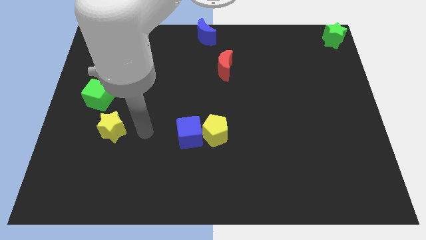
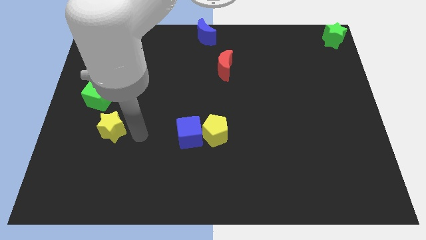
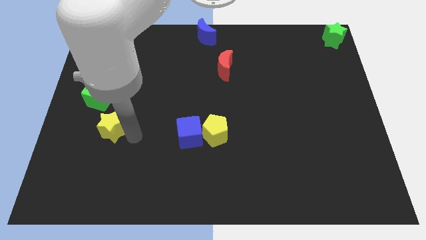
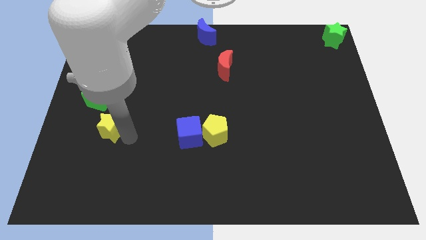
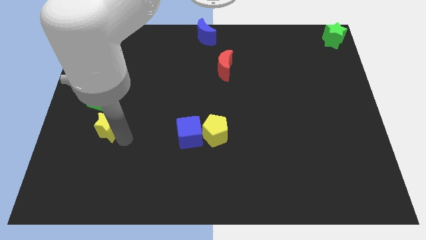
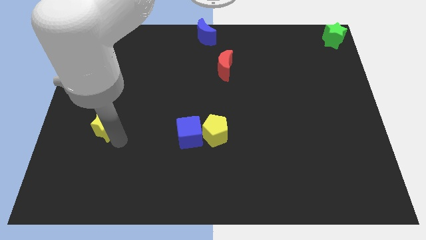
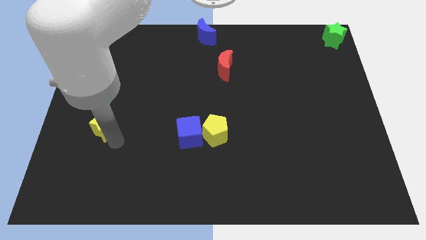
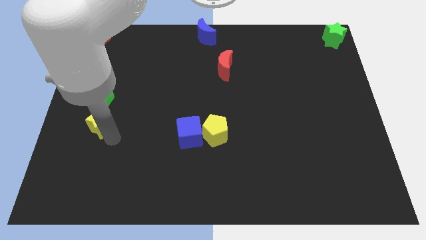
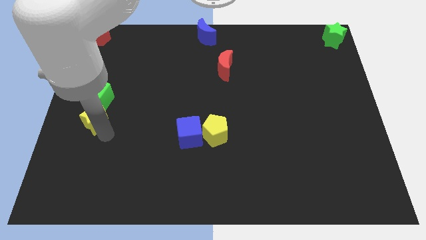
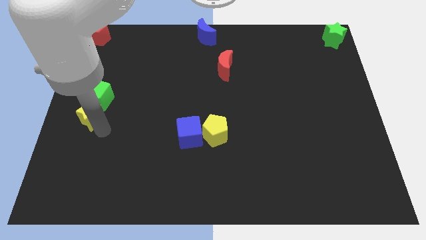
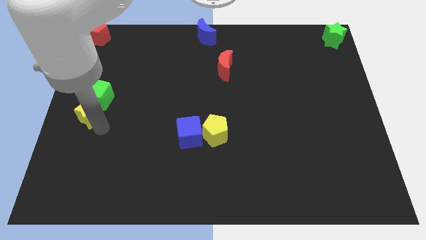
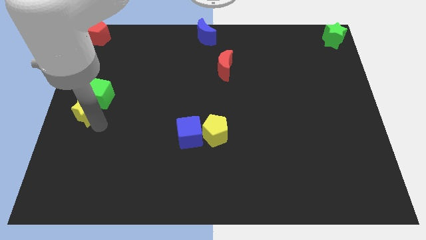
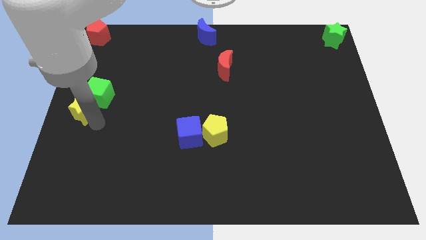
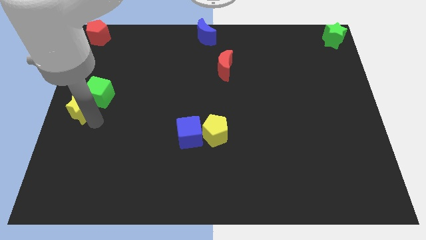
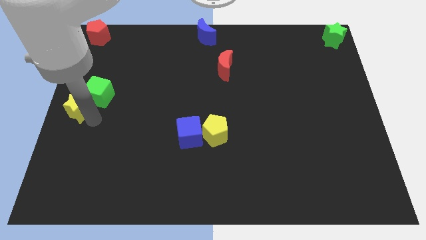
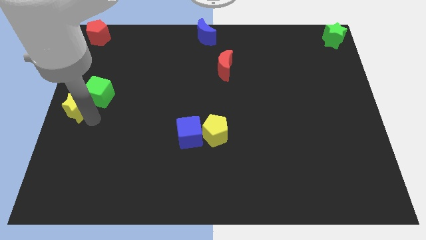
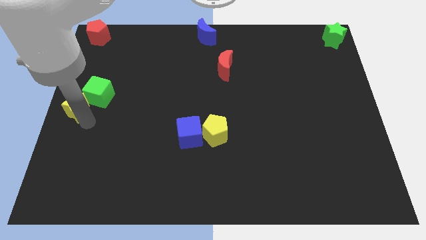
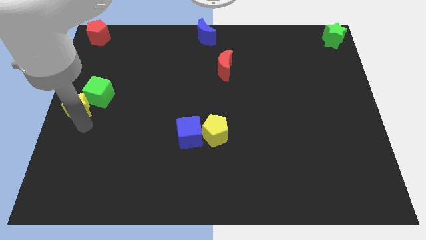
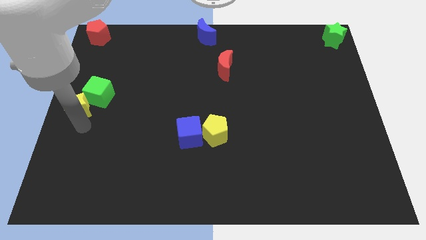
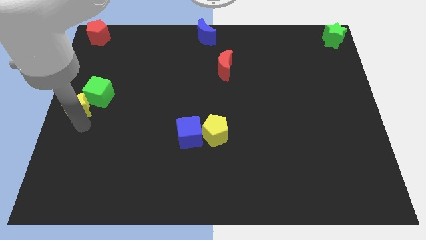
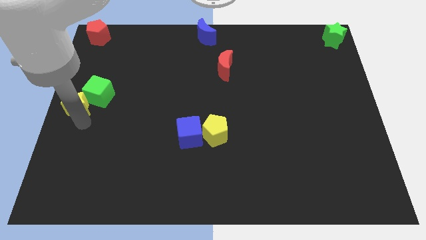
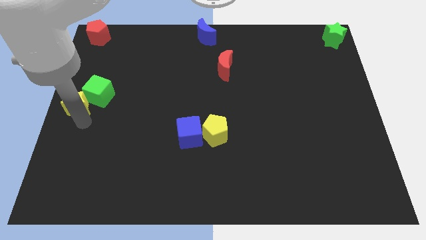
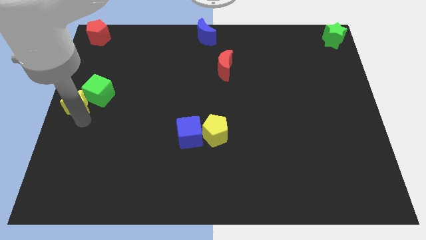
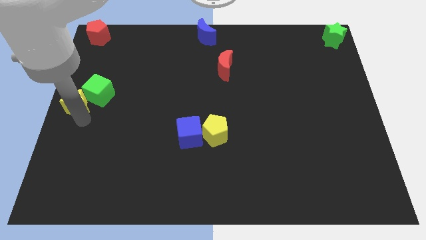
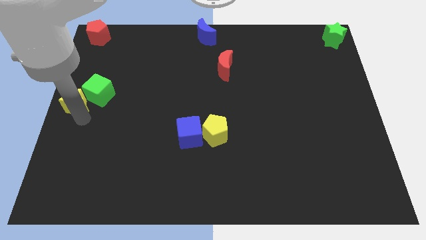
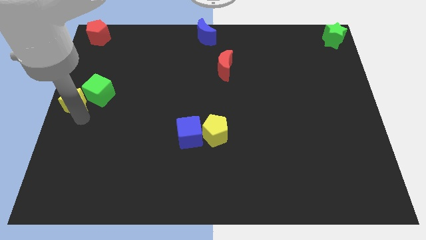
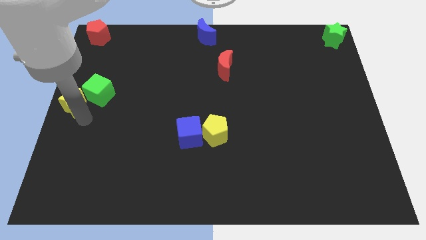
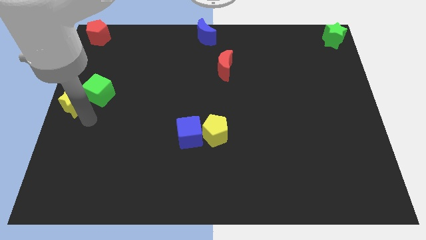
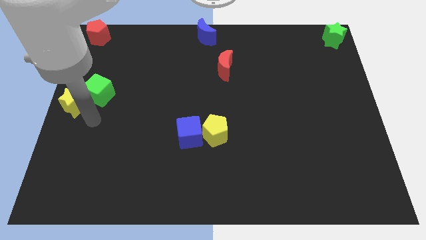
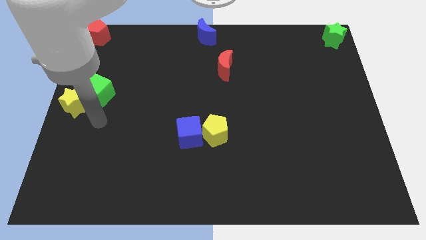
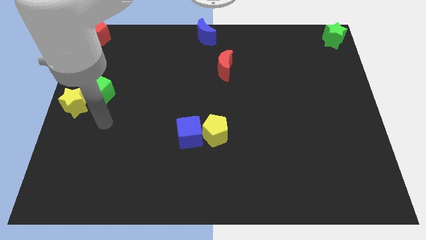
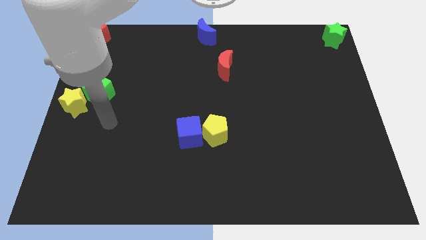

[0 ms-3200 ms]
push the yellow star to the left center on the board

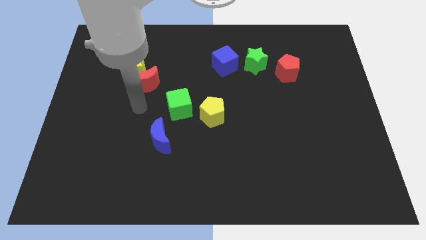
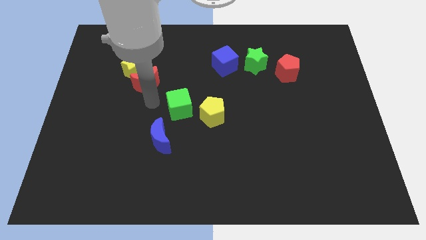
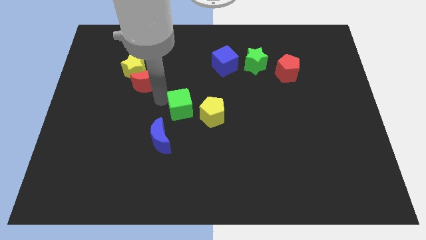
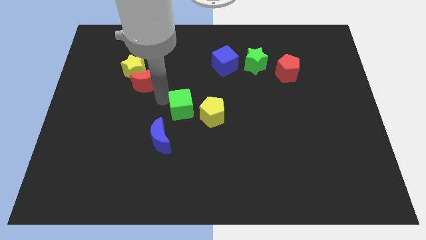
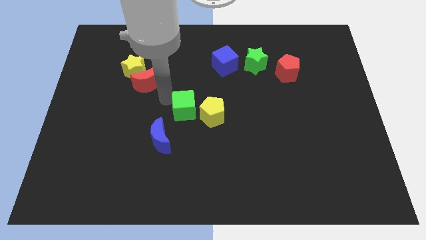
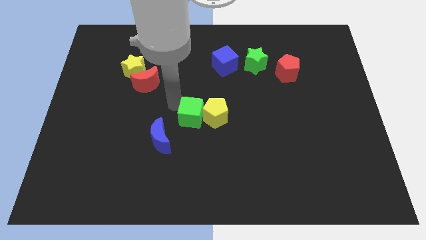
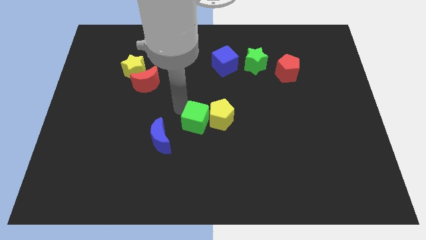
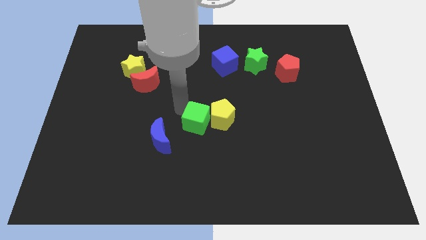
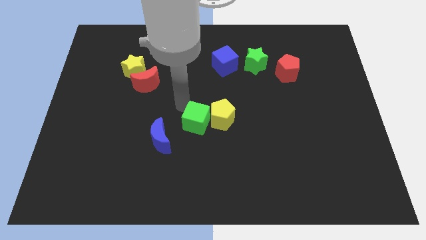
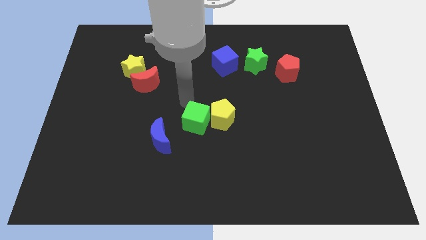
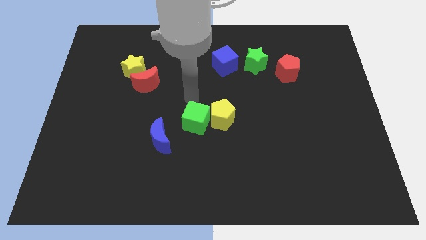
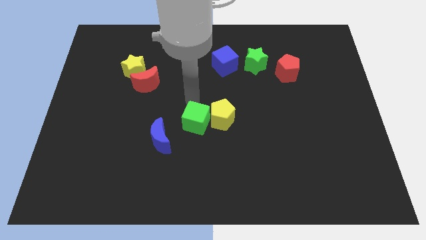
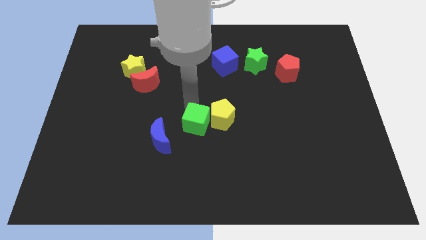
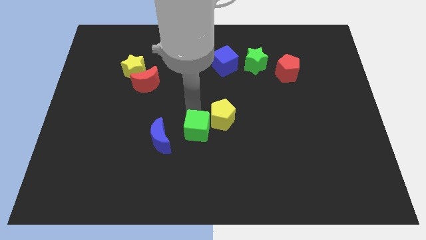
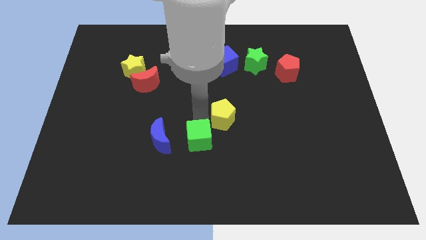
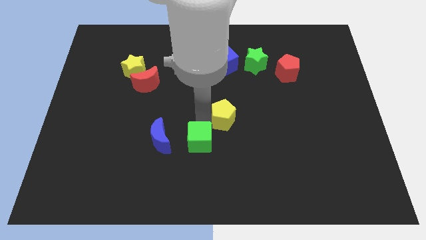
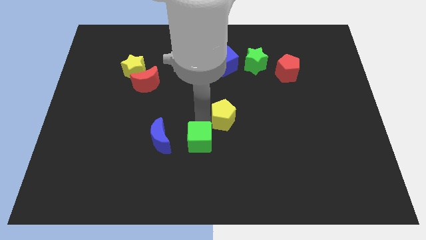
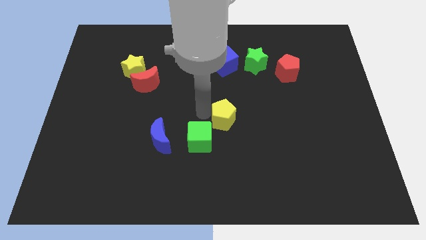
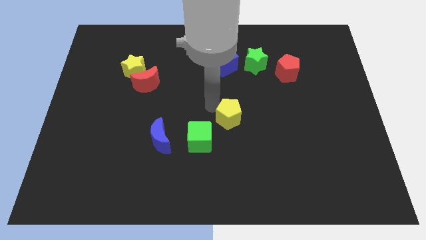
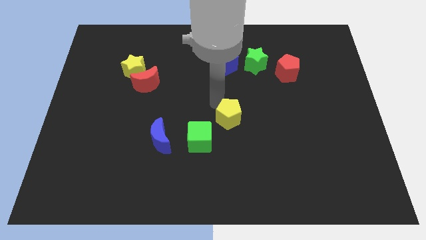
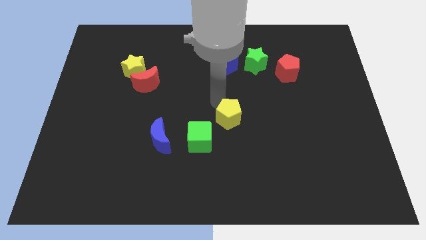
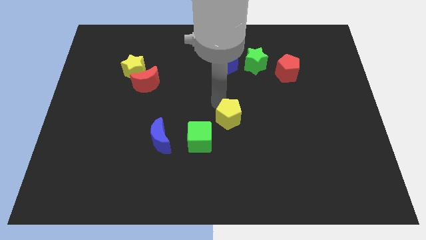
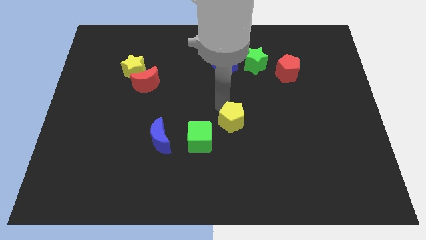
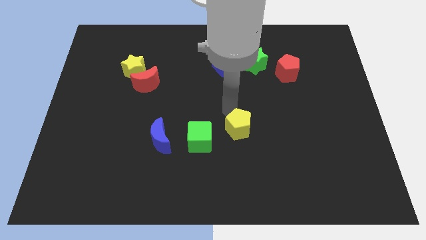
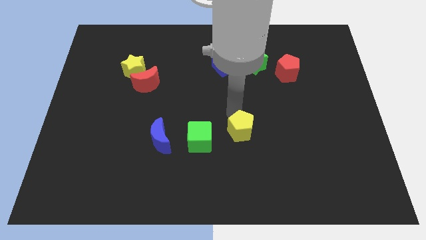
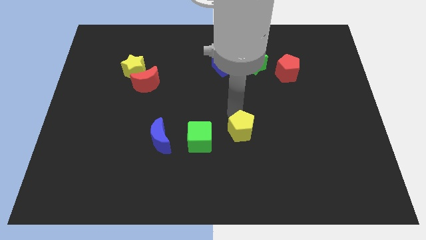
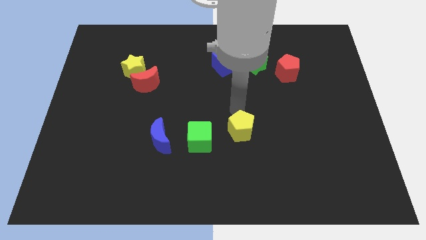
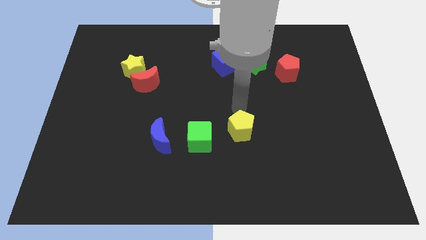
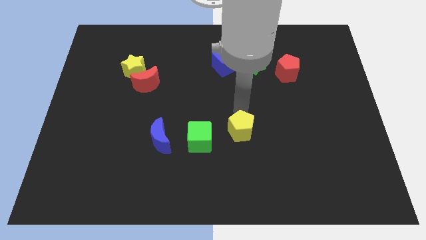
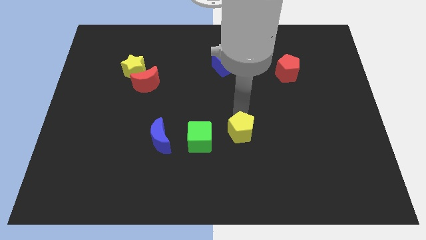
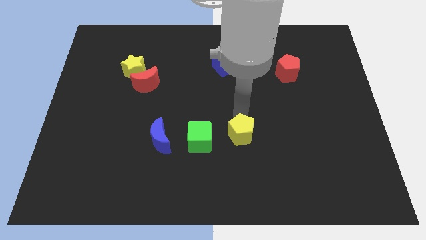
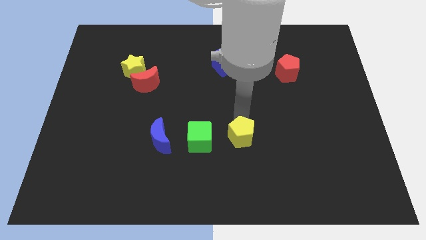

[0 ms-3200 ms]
arrange the blue moon green cube and yellow pentagon in a horizontal line

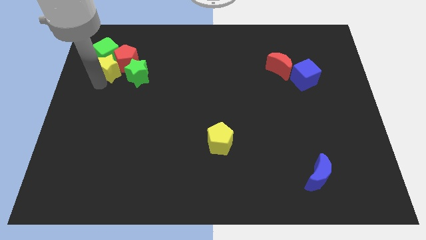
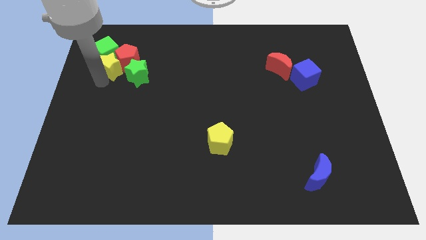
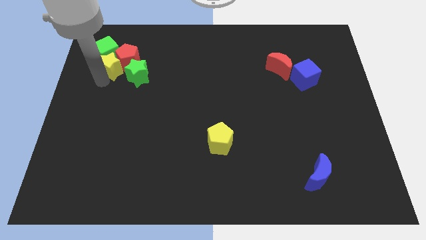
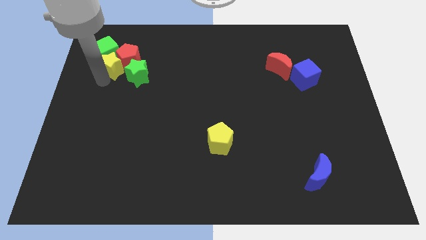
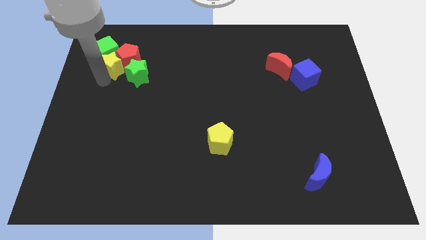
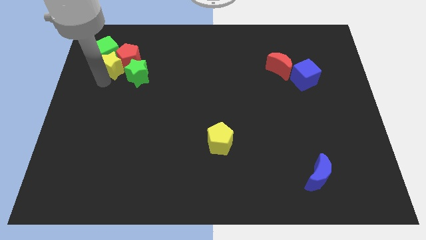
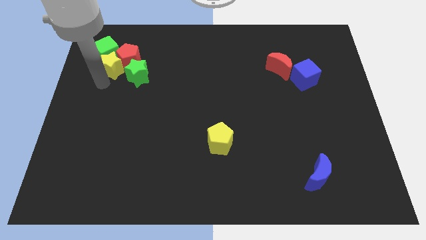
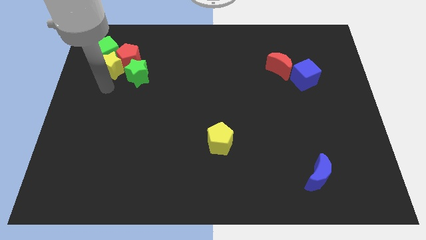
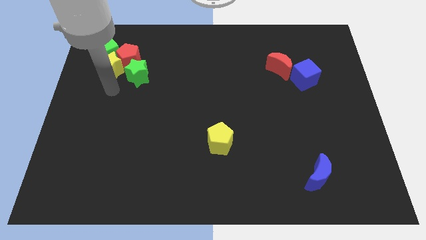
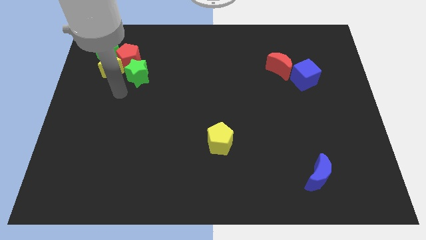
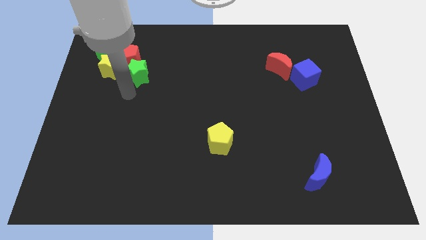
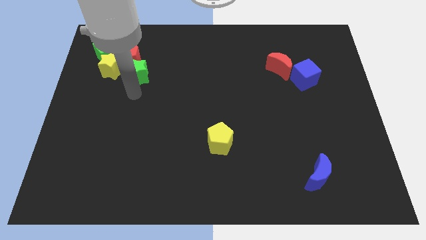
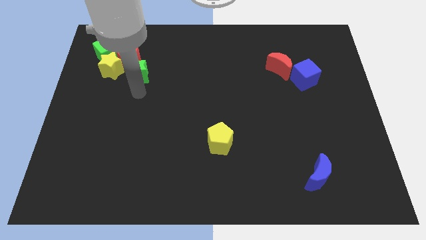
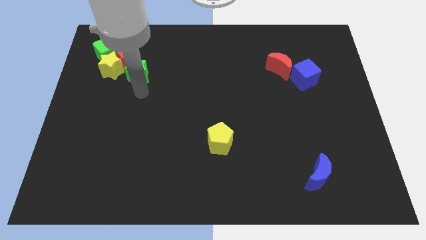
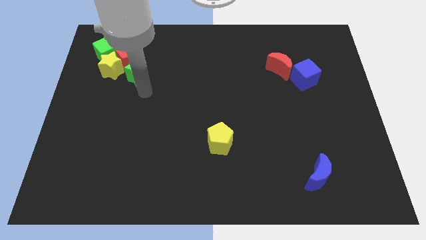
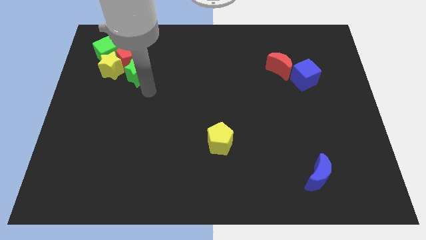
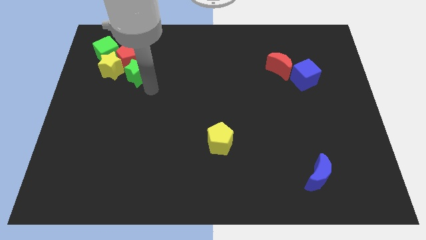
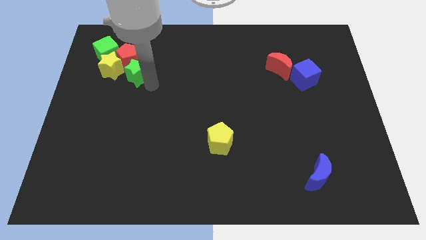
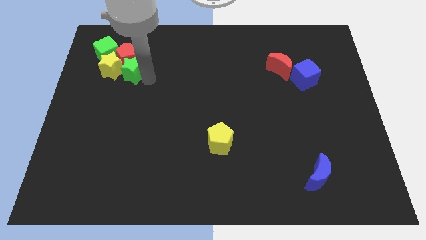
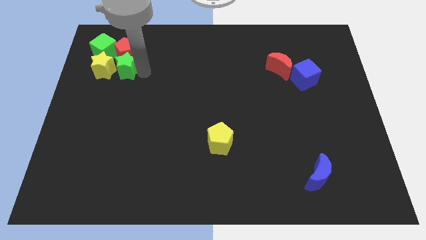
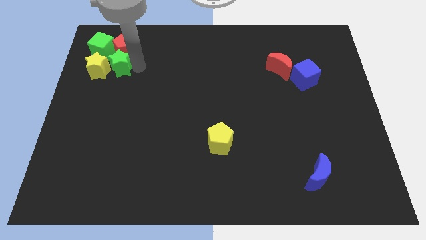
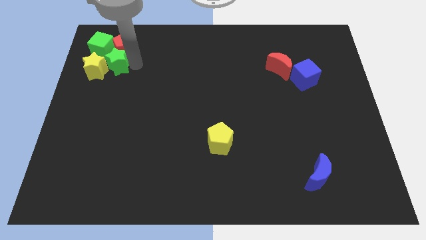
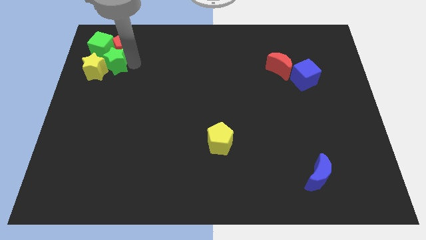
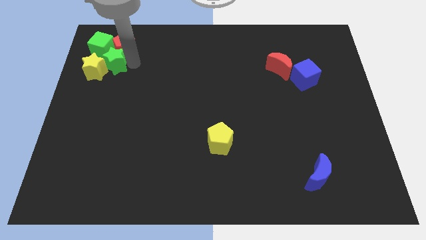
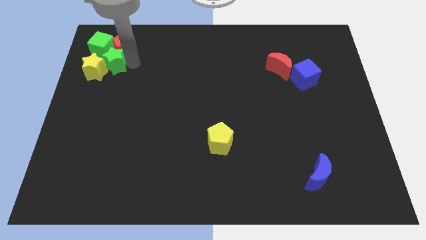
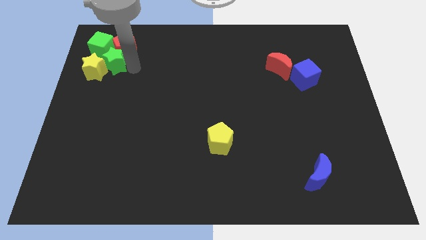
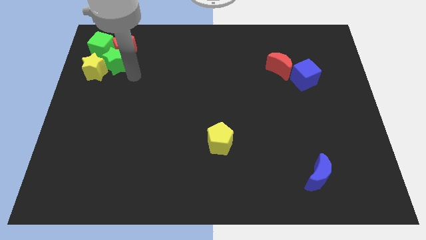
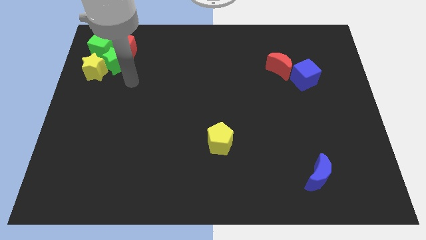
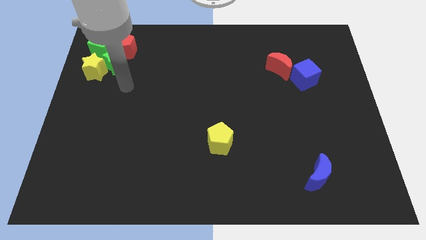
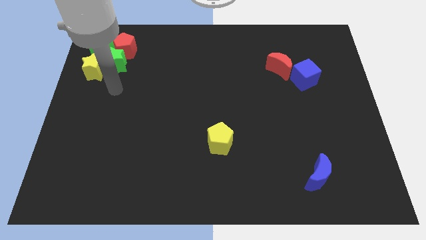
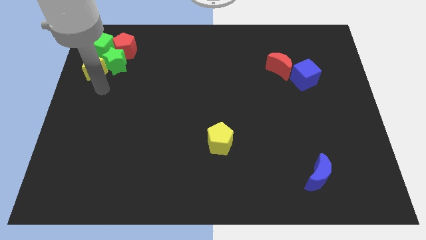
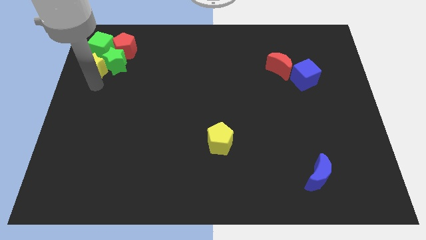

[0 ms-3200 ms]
move the green star into the group of blocks
